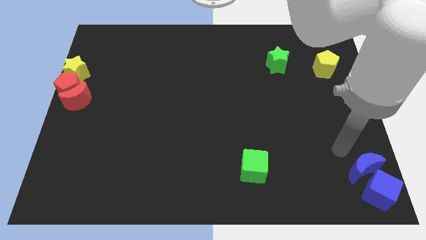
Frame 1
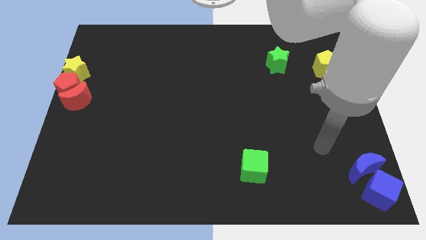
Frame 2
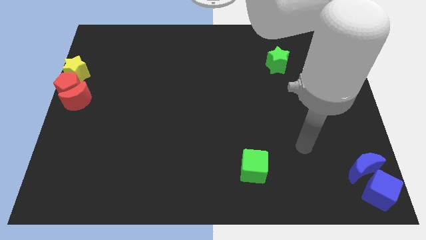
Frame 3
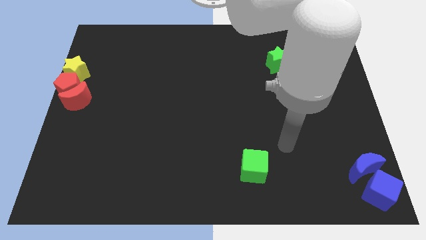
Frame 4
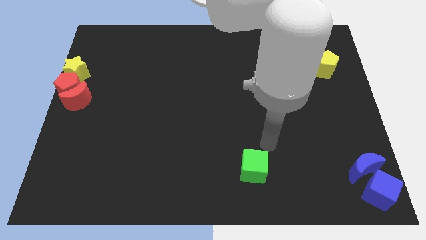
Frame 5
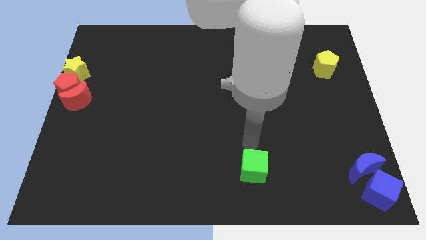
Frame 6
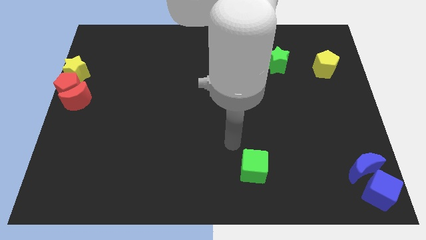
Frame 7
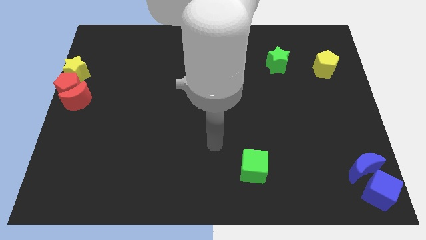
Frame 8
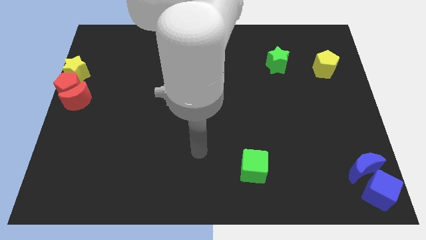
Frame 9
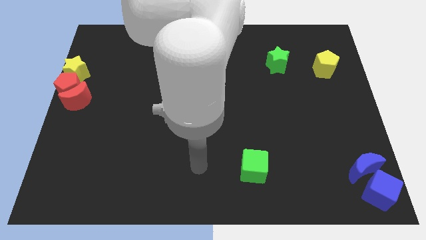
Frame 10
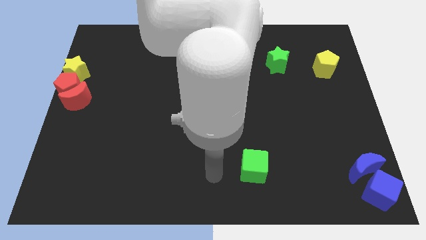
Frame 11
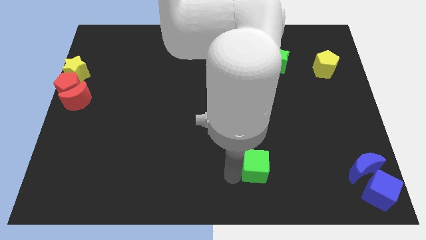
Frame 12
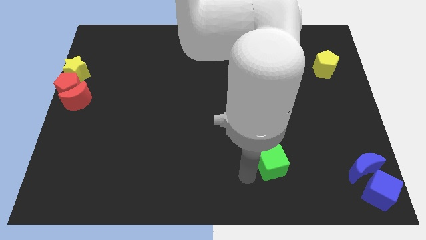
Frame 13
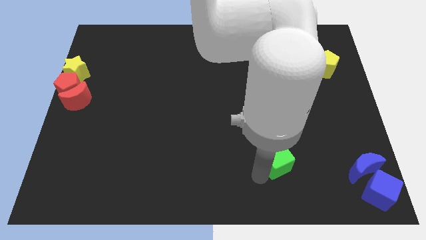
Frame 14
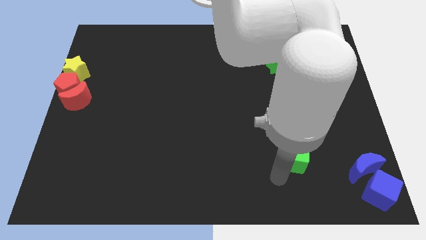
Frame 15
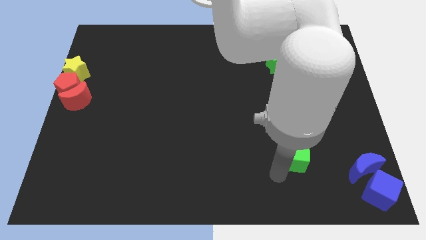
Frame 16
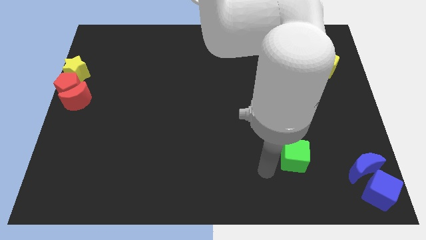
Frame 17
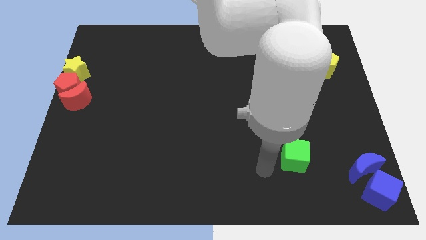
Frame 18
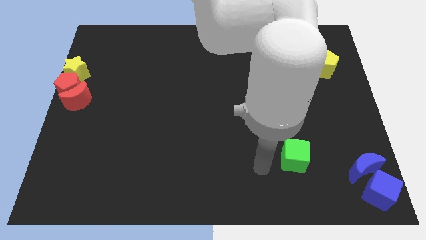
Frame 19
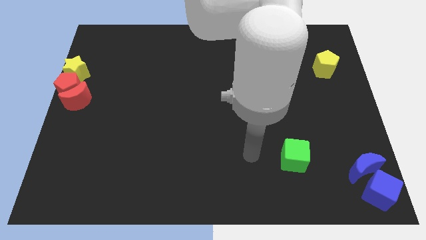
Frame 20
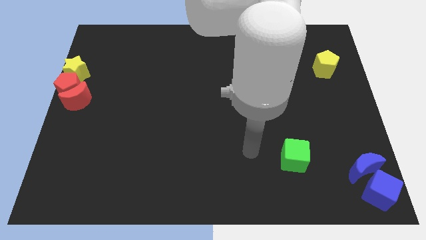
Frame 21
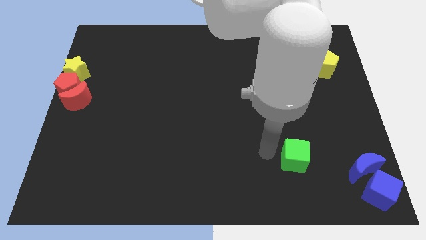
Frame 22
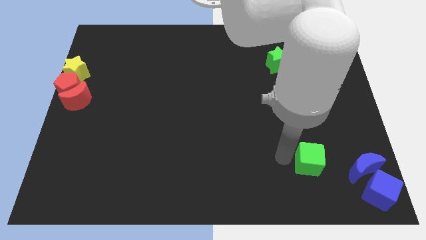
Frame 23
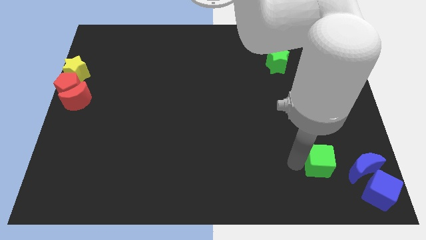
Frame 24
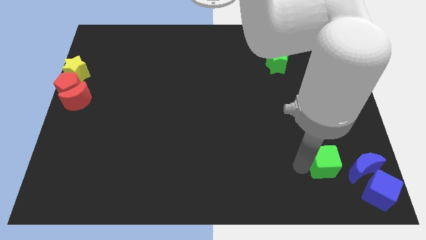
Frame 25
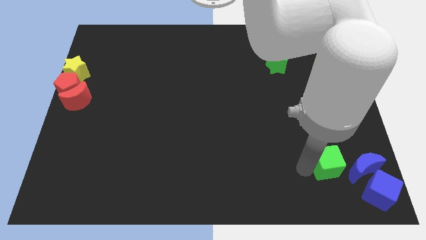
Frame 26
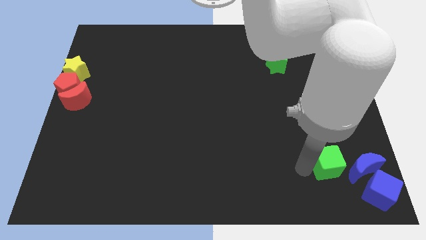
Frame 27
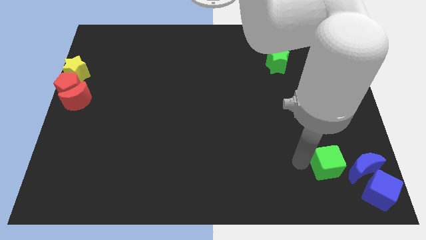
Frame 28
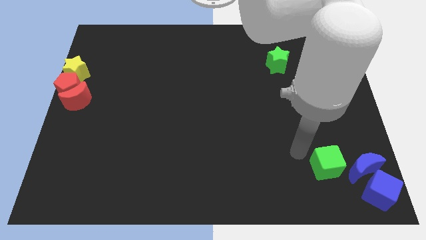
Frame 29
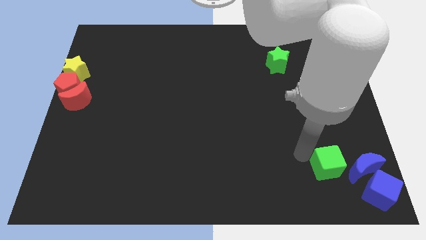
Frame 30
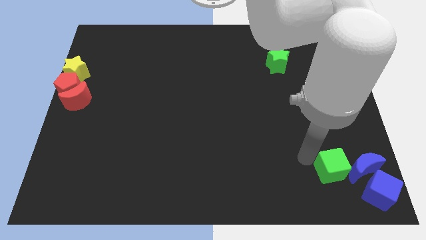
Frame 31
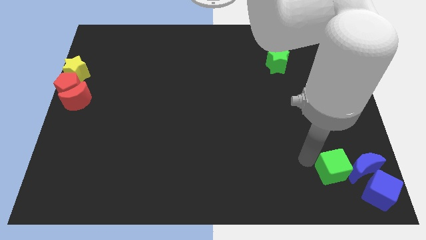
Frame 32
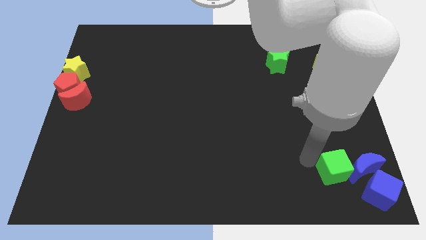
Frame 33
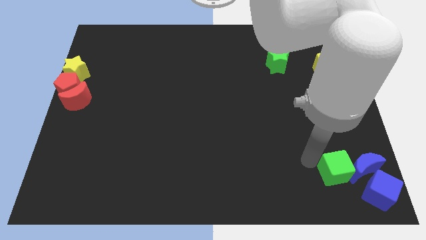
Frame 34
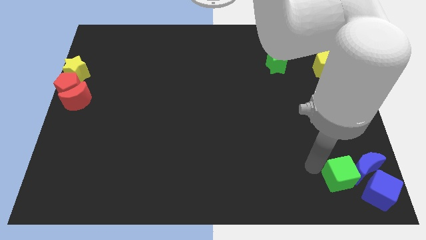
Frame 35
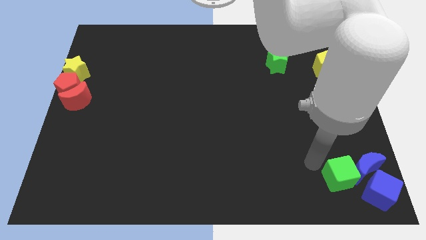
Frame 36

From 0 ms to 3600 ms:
push the green cube into blue crescent

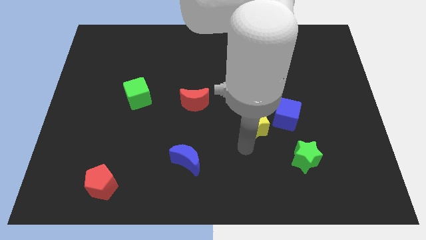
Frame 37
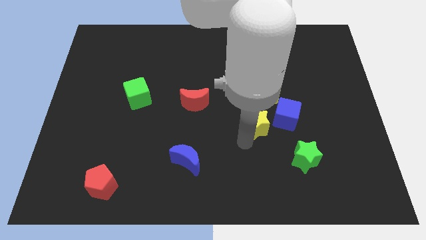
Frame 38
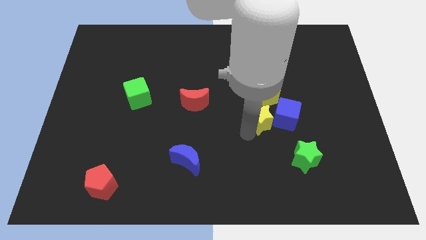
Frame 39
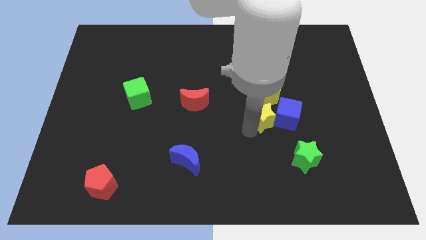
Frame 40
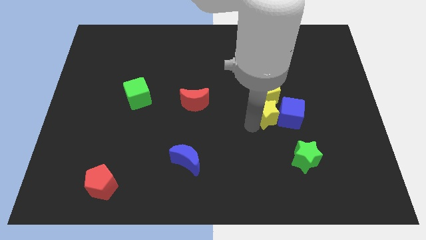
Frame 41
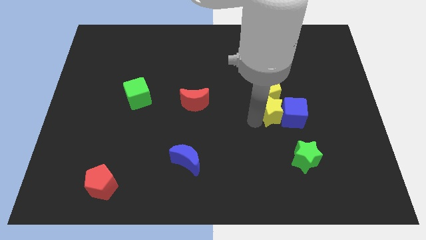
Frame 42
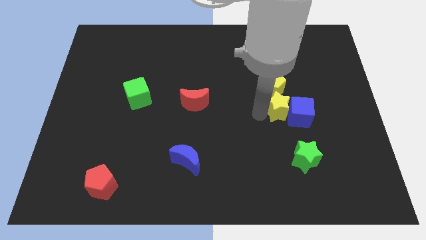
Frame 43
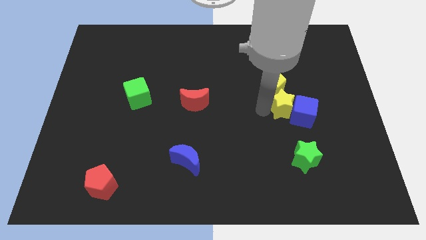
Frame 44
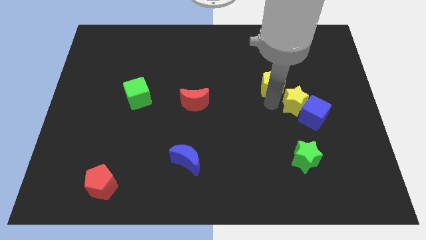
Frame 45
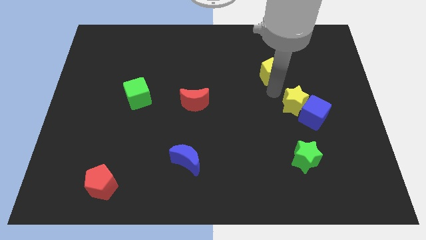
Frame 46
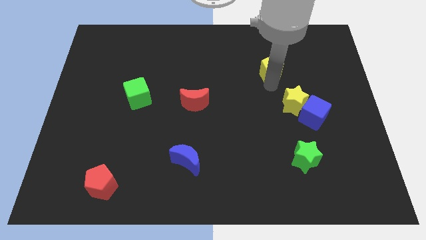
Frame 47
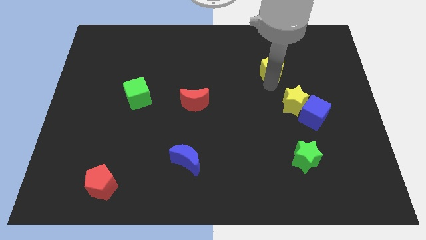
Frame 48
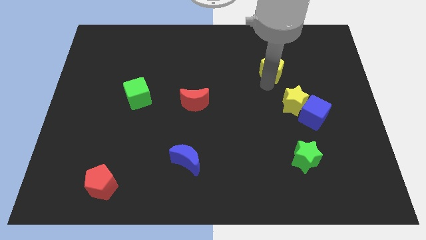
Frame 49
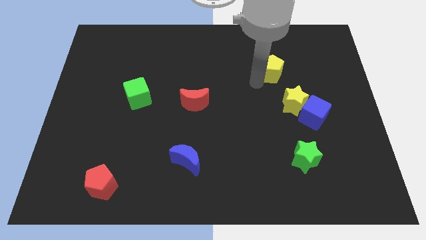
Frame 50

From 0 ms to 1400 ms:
move yellow star into the blue block

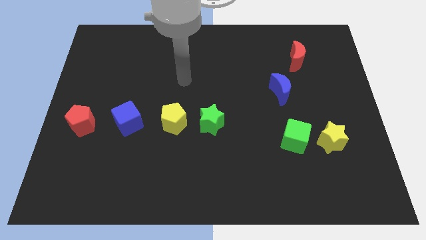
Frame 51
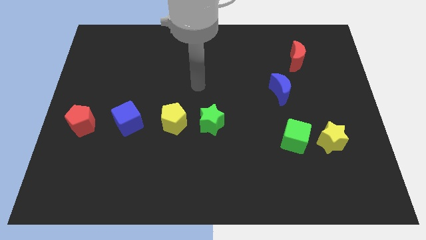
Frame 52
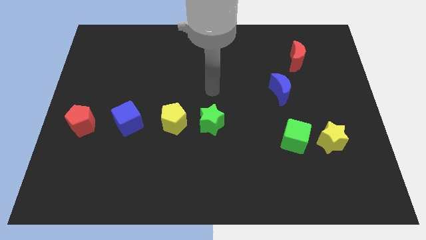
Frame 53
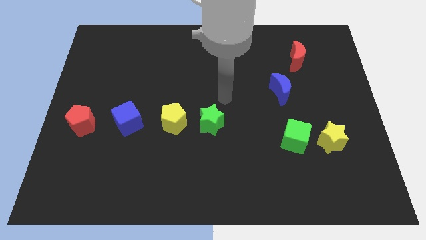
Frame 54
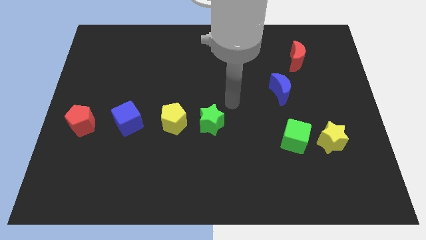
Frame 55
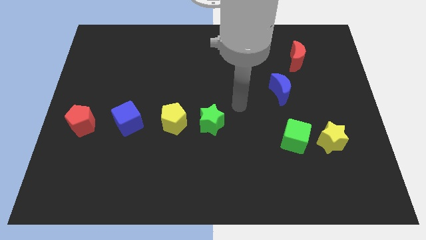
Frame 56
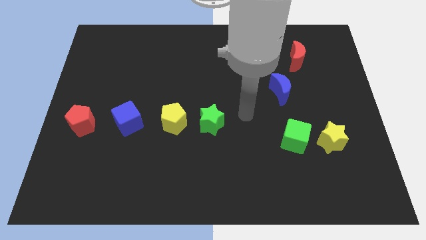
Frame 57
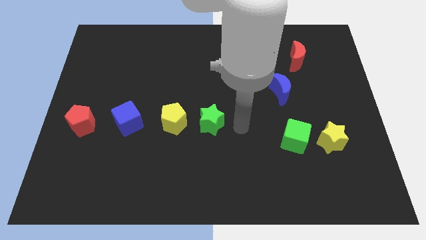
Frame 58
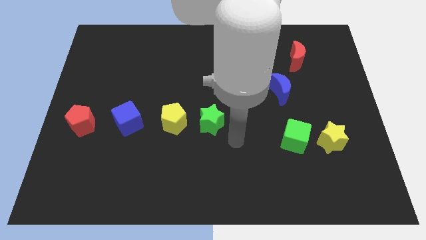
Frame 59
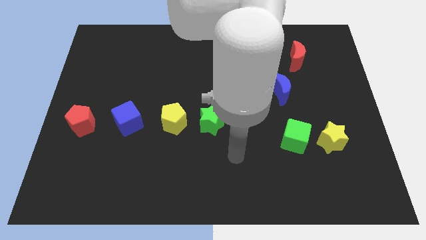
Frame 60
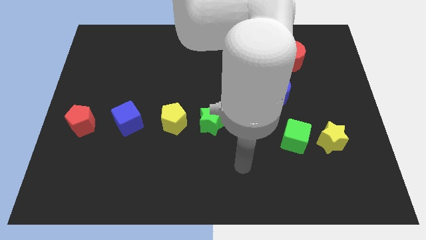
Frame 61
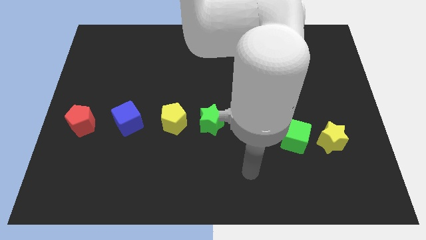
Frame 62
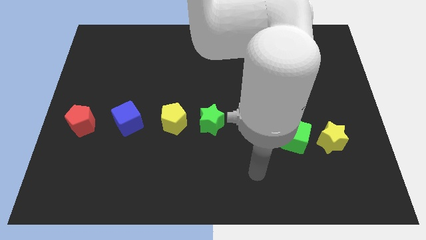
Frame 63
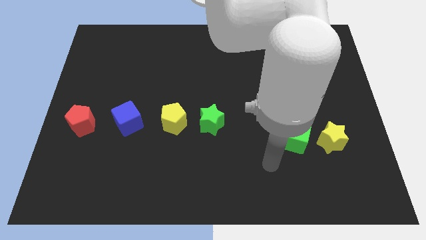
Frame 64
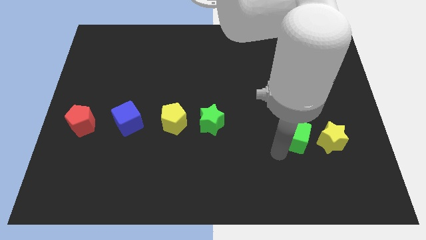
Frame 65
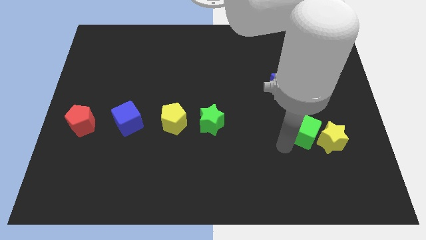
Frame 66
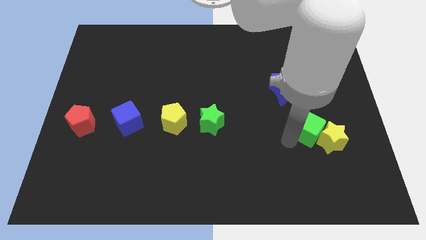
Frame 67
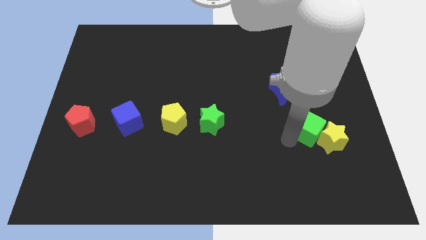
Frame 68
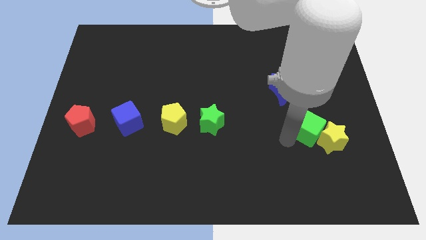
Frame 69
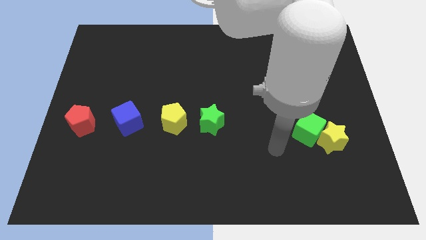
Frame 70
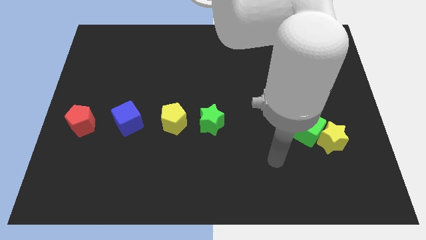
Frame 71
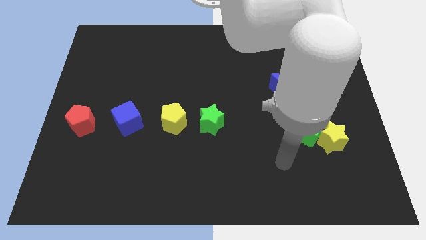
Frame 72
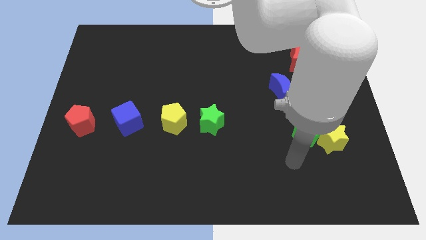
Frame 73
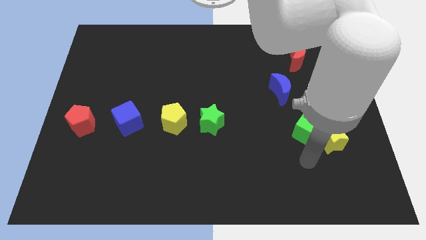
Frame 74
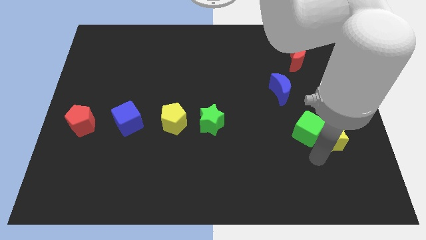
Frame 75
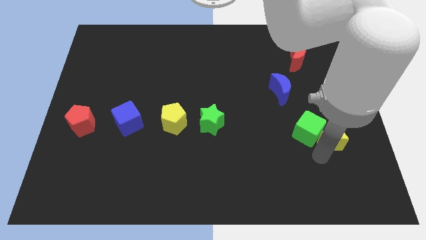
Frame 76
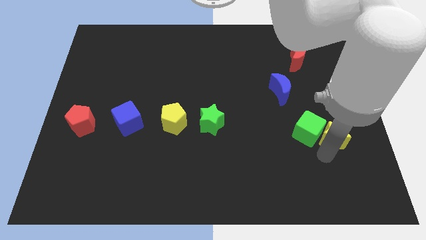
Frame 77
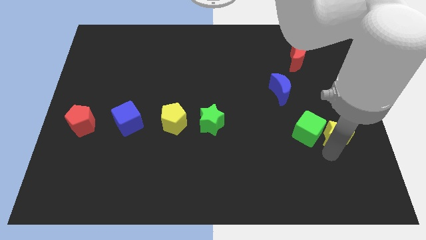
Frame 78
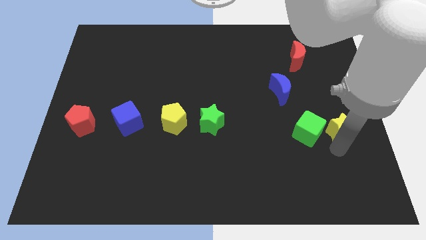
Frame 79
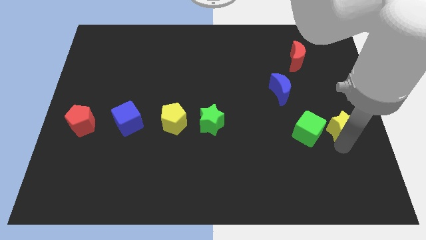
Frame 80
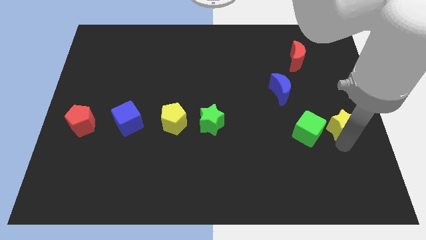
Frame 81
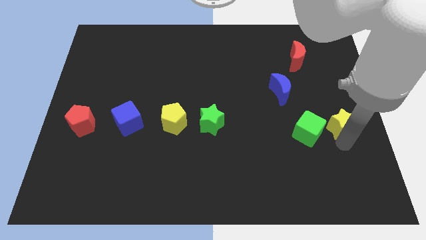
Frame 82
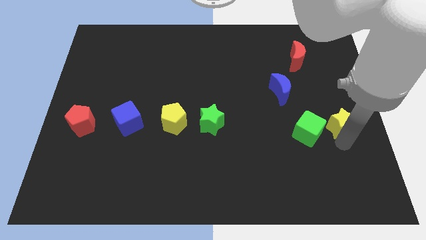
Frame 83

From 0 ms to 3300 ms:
touch the green cube and yellow star

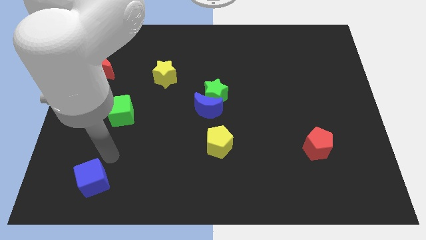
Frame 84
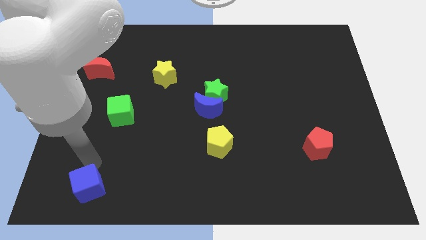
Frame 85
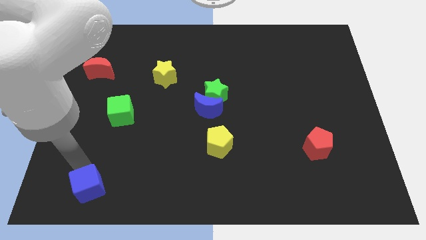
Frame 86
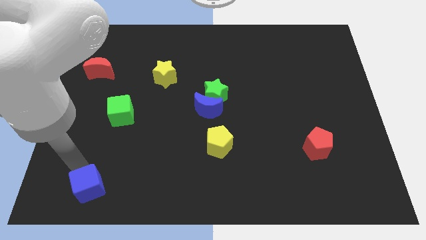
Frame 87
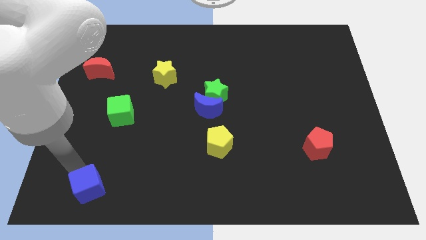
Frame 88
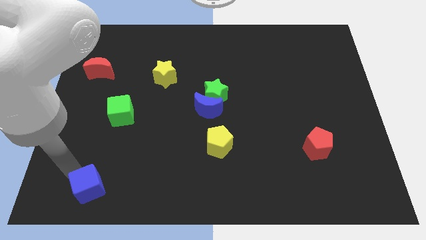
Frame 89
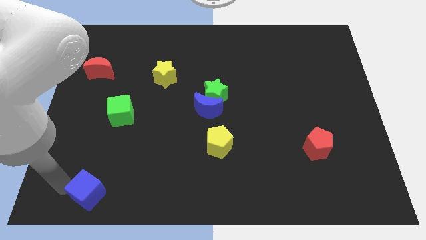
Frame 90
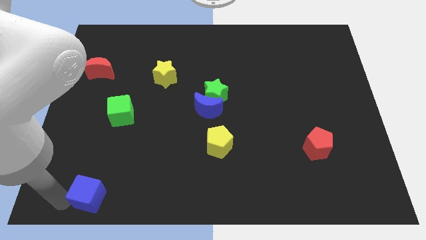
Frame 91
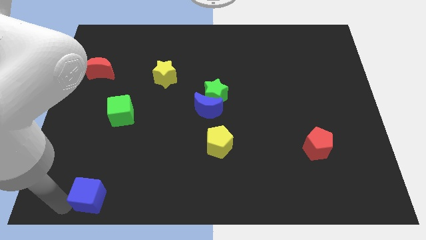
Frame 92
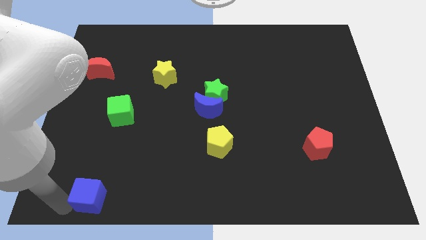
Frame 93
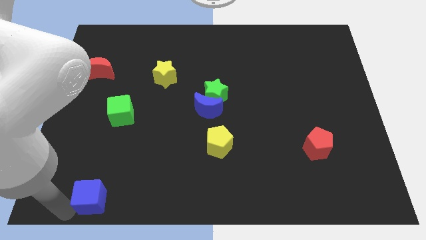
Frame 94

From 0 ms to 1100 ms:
push blue cube towards down
